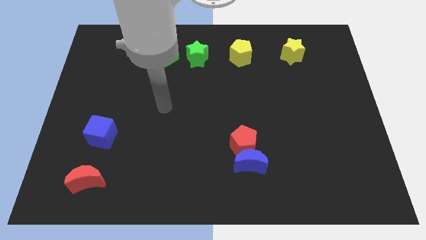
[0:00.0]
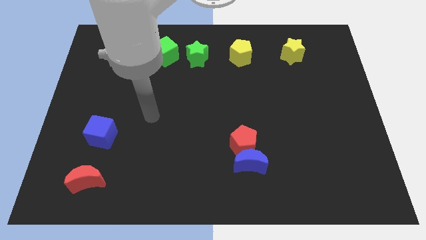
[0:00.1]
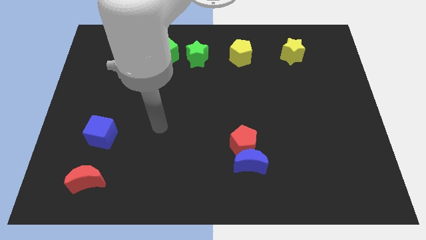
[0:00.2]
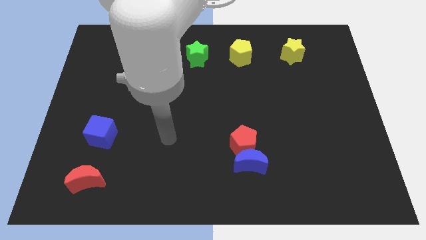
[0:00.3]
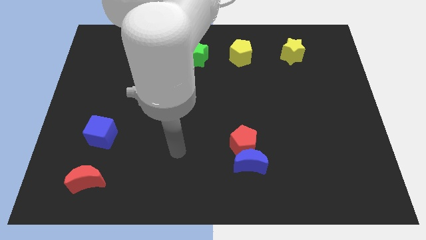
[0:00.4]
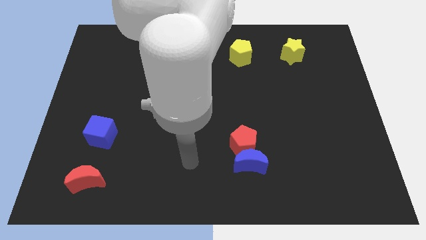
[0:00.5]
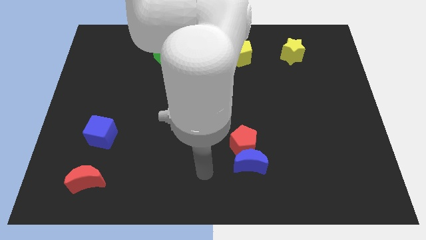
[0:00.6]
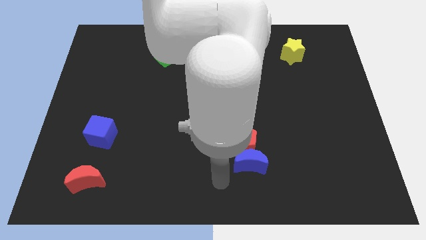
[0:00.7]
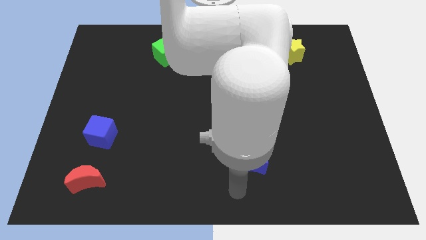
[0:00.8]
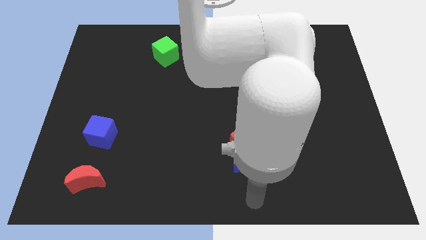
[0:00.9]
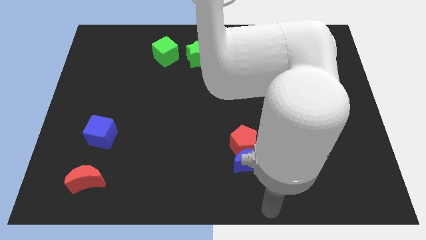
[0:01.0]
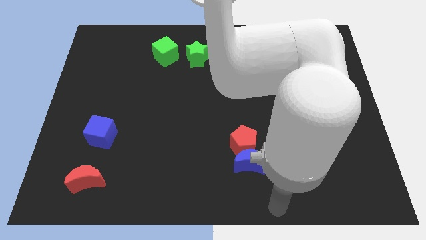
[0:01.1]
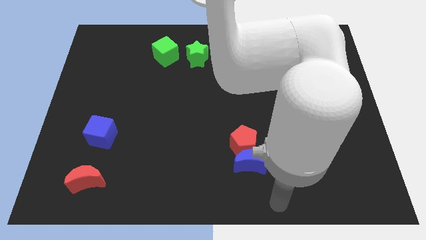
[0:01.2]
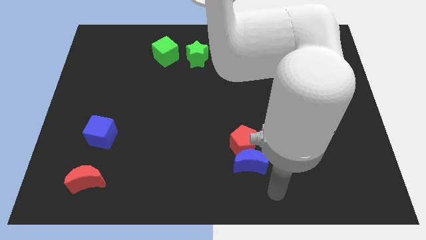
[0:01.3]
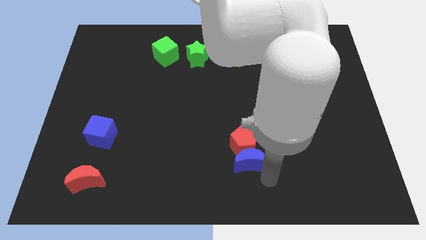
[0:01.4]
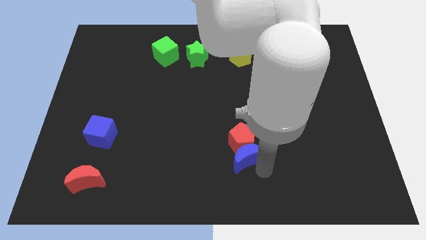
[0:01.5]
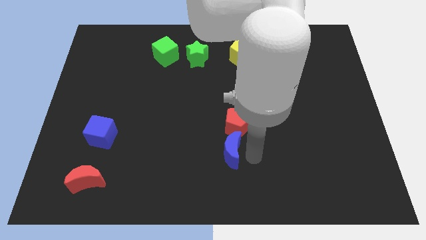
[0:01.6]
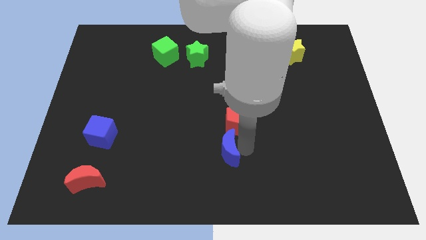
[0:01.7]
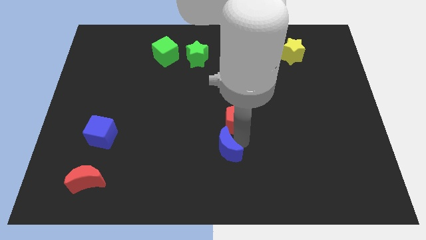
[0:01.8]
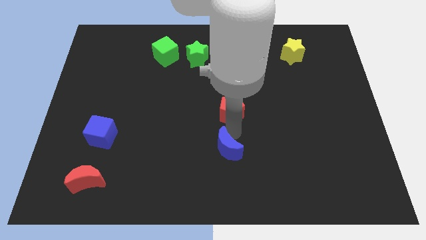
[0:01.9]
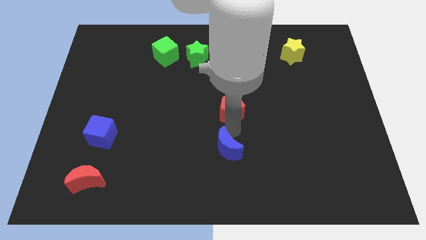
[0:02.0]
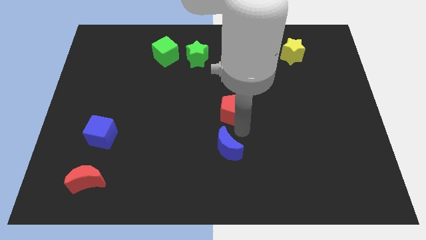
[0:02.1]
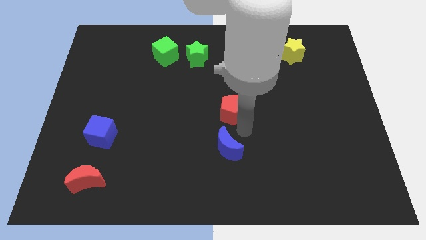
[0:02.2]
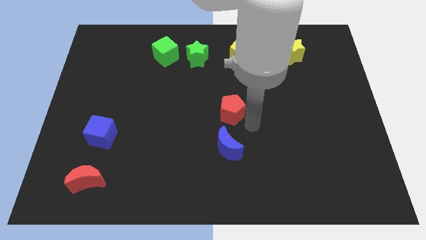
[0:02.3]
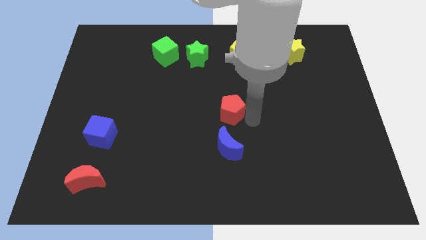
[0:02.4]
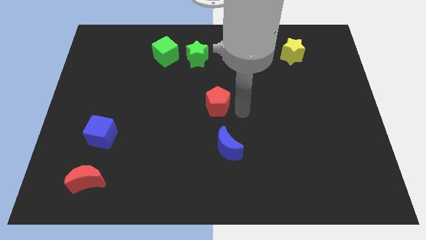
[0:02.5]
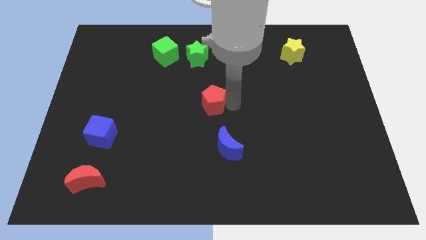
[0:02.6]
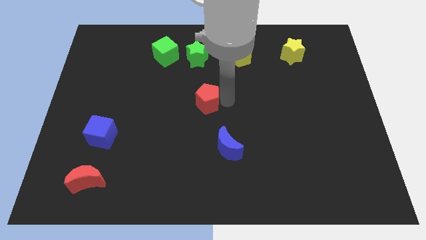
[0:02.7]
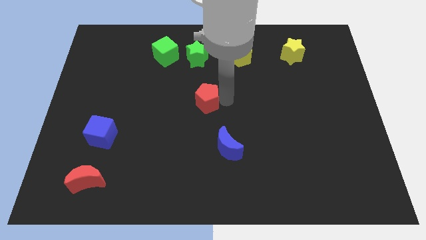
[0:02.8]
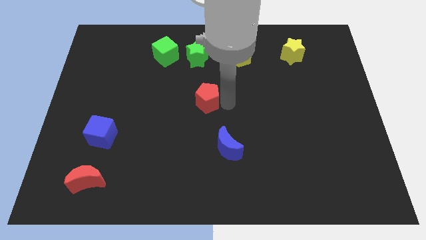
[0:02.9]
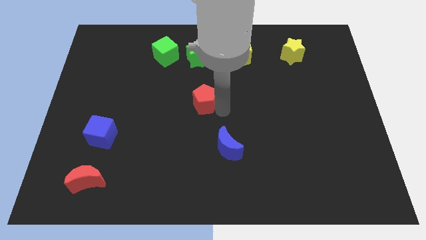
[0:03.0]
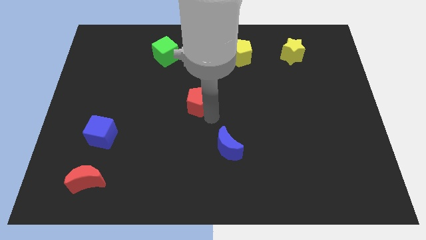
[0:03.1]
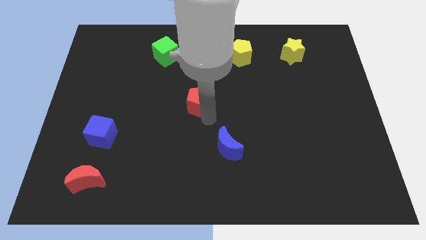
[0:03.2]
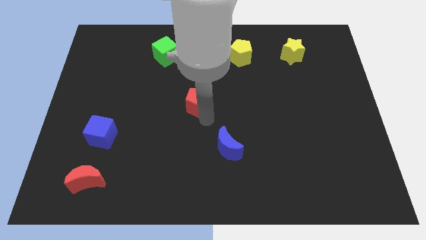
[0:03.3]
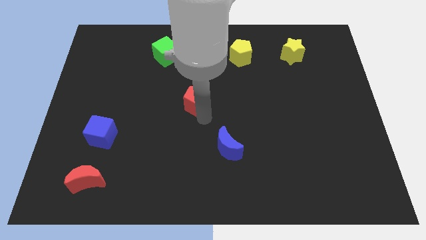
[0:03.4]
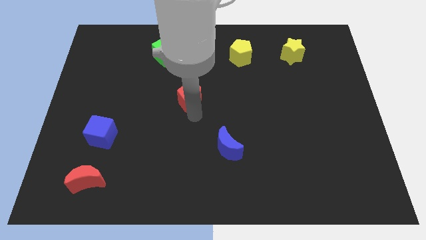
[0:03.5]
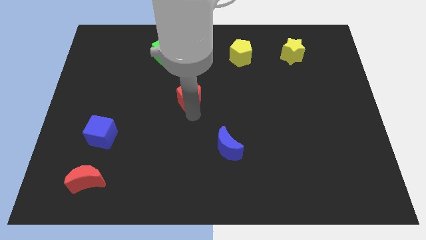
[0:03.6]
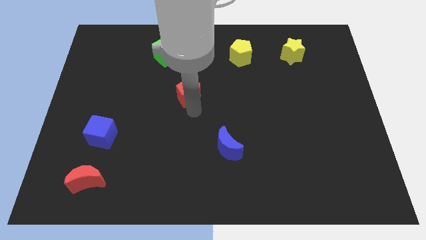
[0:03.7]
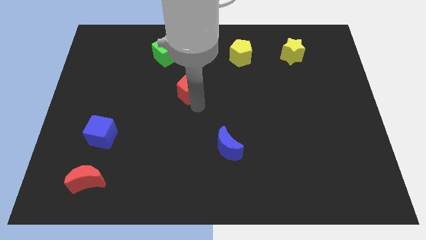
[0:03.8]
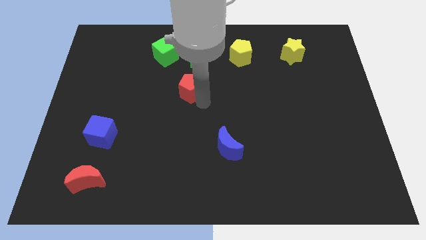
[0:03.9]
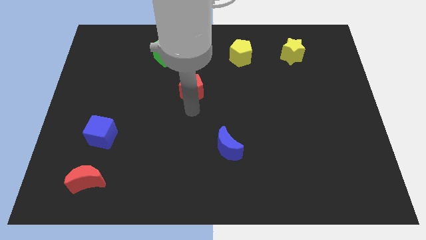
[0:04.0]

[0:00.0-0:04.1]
move the red pentagon to the bottom of the green star

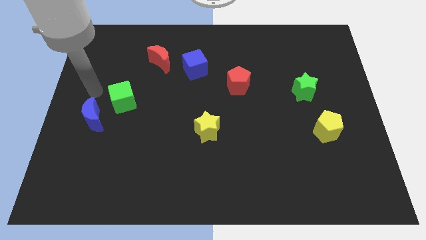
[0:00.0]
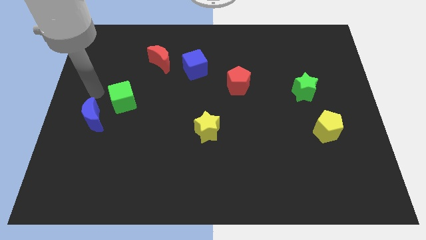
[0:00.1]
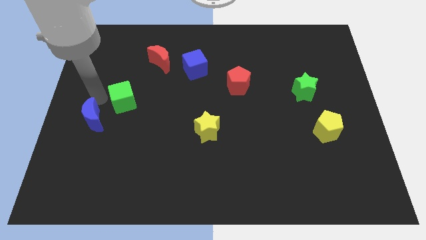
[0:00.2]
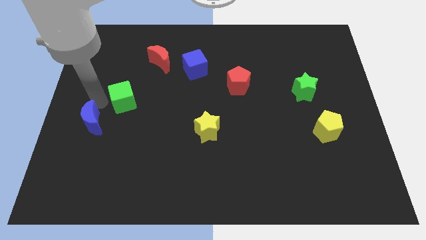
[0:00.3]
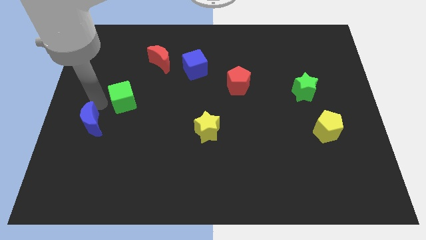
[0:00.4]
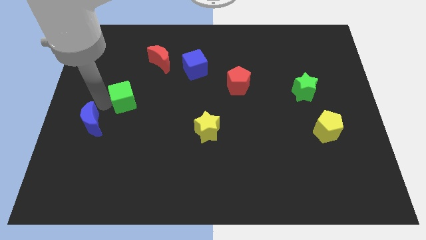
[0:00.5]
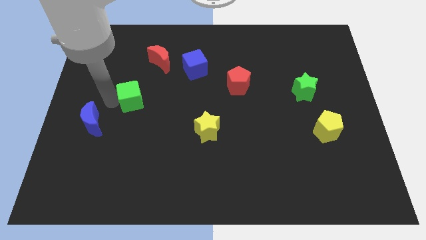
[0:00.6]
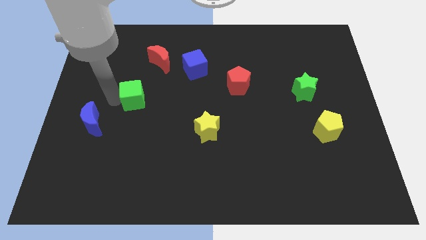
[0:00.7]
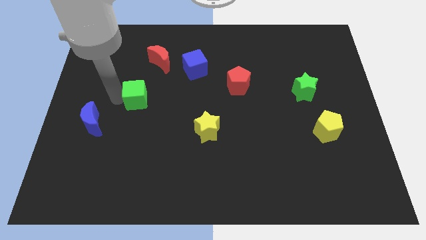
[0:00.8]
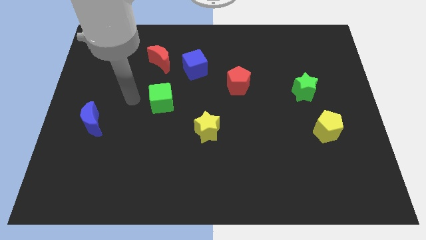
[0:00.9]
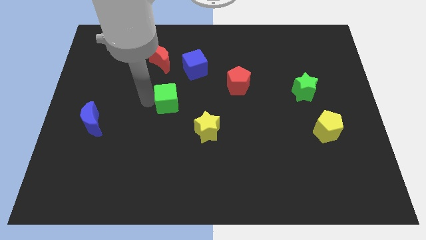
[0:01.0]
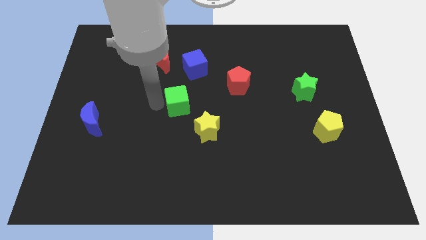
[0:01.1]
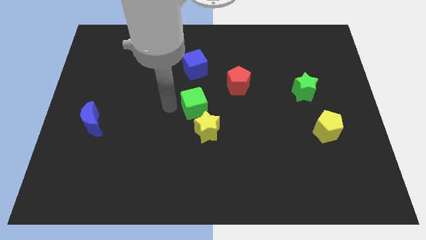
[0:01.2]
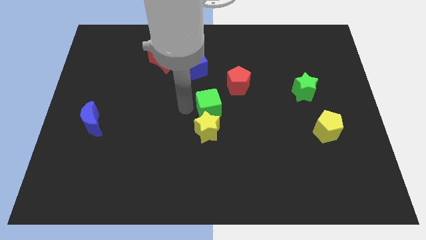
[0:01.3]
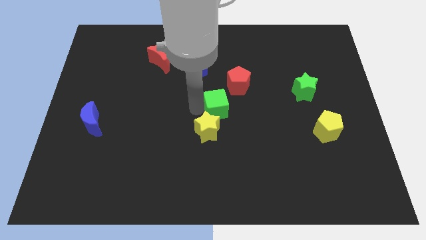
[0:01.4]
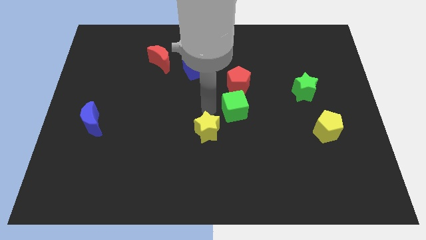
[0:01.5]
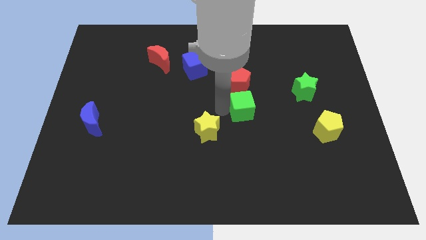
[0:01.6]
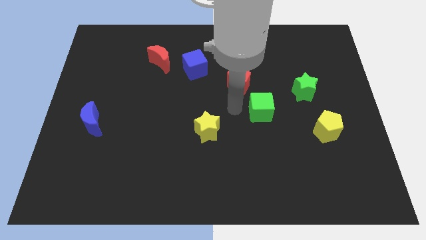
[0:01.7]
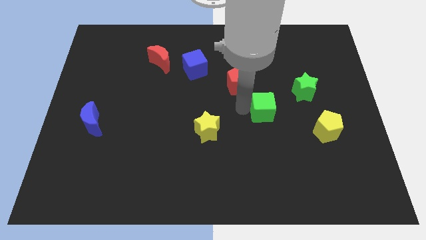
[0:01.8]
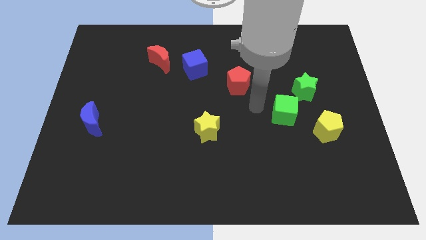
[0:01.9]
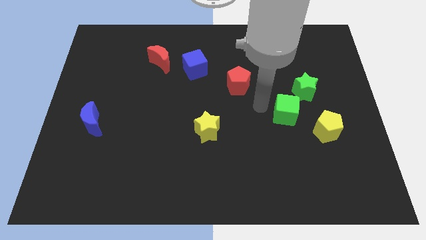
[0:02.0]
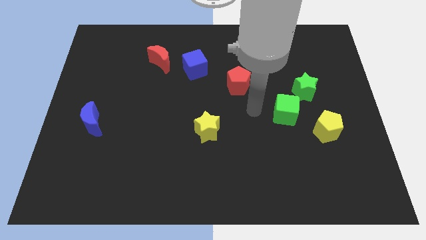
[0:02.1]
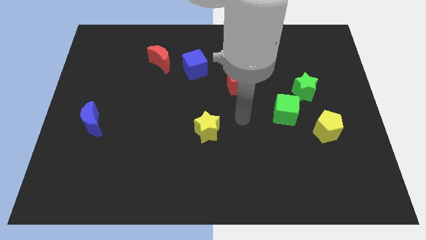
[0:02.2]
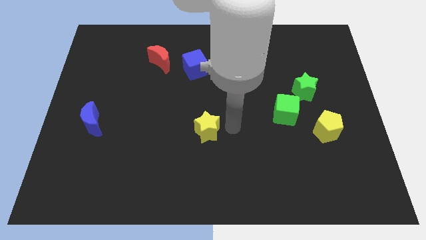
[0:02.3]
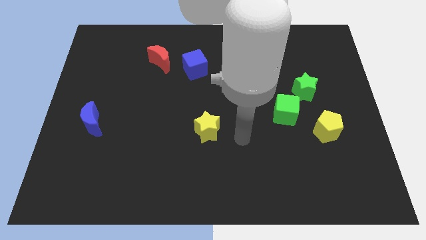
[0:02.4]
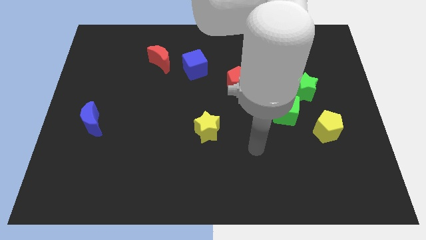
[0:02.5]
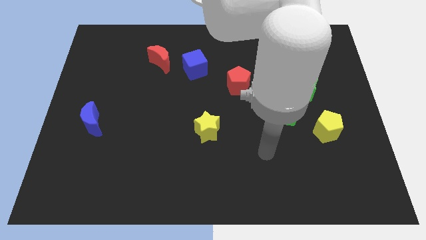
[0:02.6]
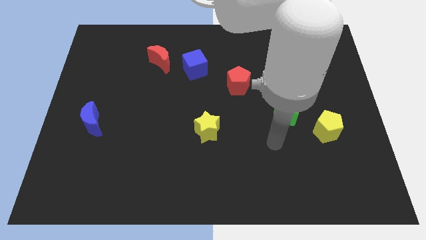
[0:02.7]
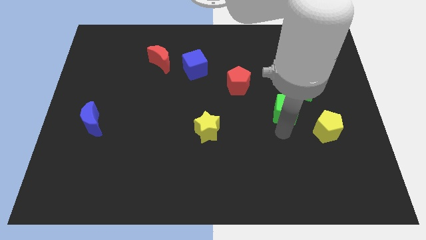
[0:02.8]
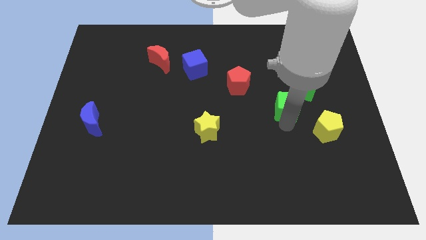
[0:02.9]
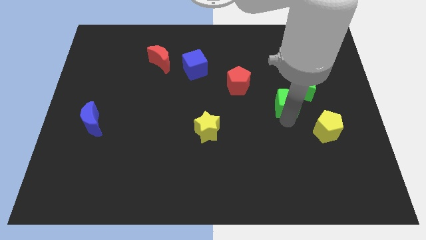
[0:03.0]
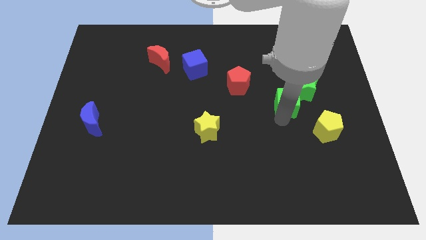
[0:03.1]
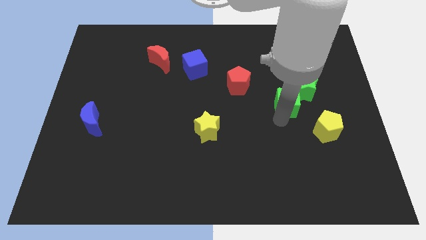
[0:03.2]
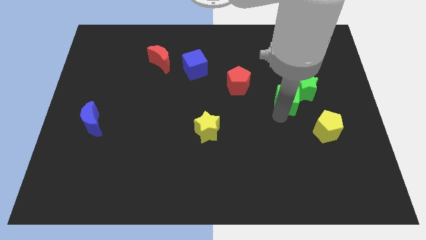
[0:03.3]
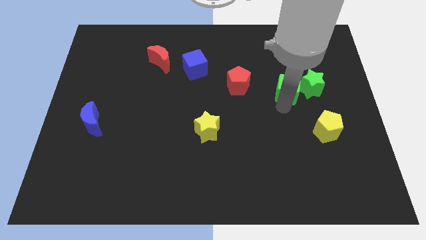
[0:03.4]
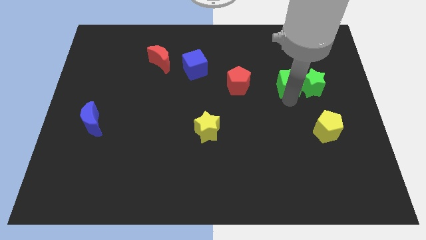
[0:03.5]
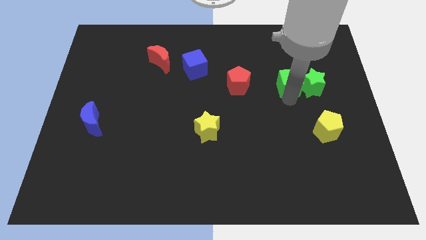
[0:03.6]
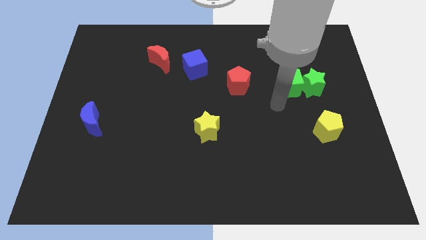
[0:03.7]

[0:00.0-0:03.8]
push the green cube into the green star

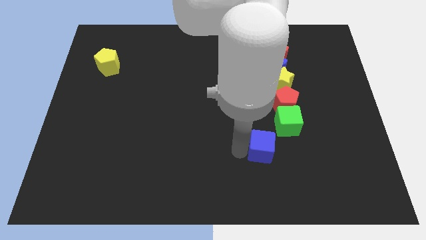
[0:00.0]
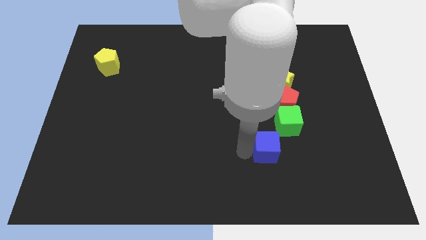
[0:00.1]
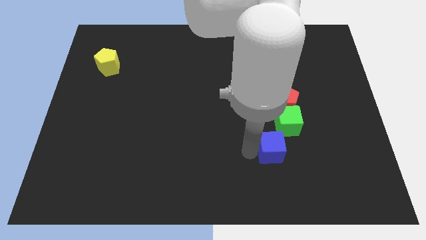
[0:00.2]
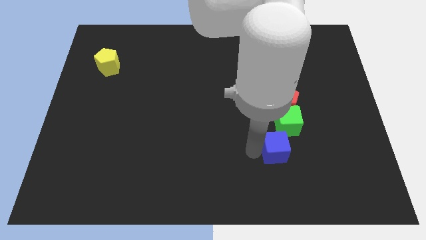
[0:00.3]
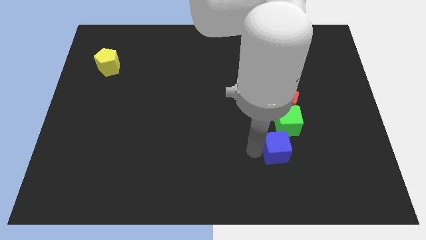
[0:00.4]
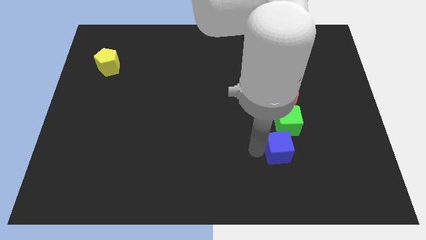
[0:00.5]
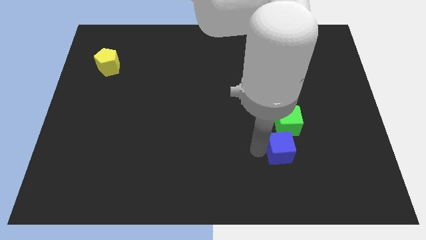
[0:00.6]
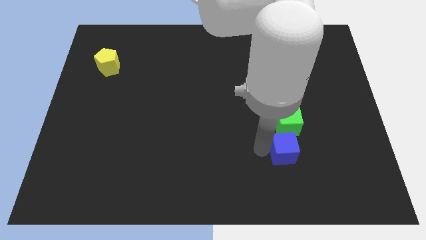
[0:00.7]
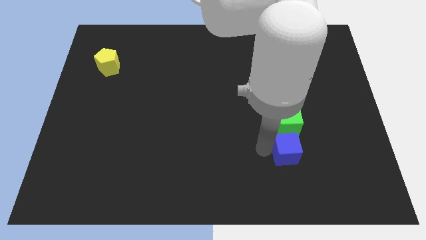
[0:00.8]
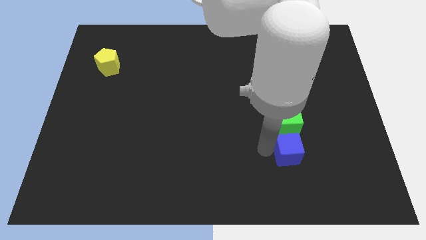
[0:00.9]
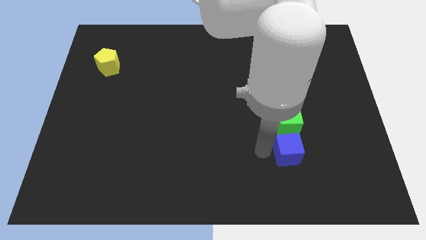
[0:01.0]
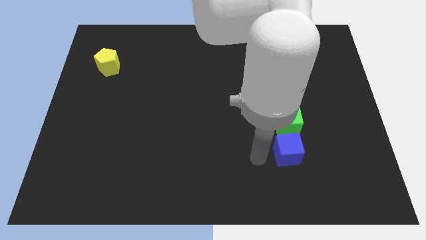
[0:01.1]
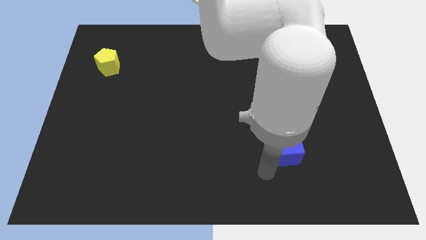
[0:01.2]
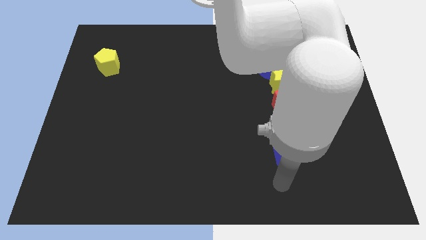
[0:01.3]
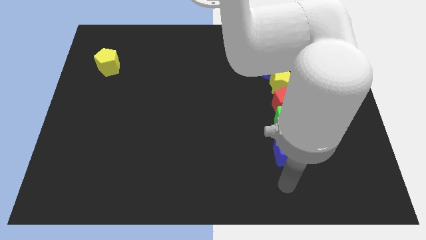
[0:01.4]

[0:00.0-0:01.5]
place the blue cube below the green cube
